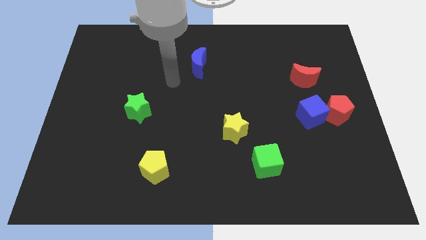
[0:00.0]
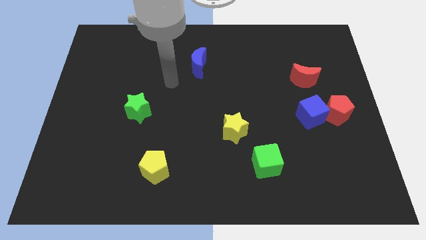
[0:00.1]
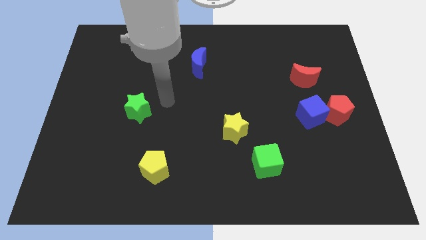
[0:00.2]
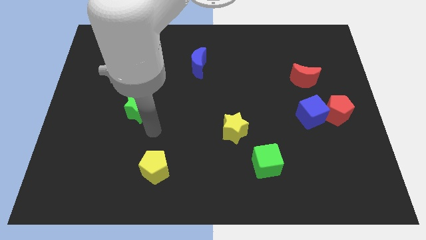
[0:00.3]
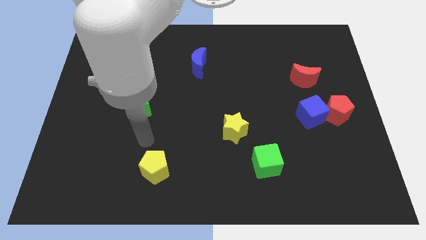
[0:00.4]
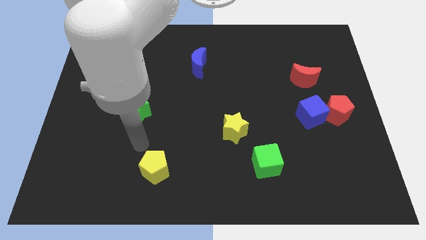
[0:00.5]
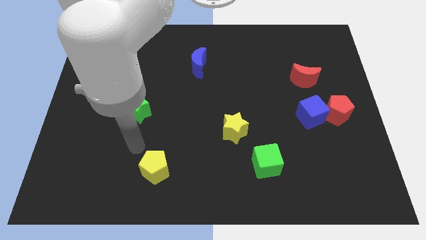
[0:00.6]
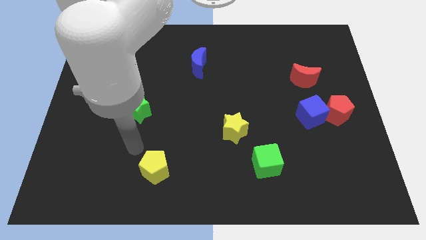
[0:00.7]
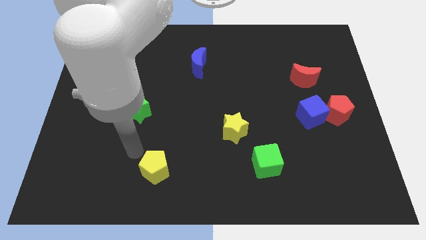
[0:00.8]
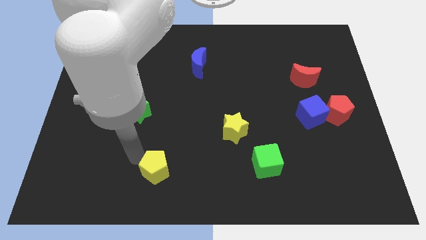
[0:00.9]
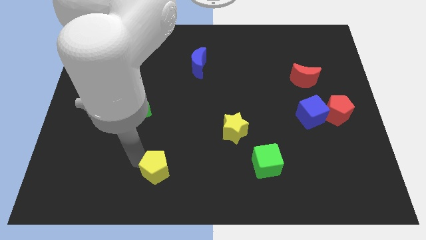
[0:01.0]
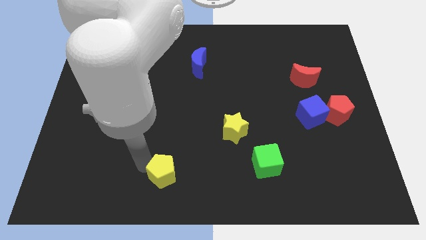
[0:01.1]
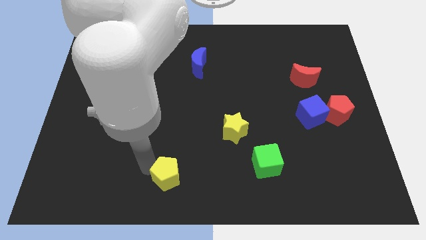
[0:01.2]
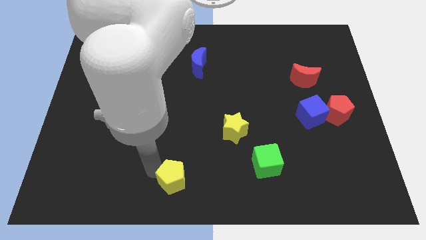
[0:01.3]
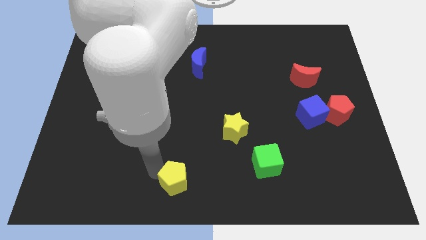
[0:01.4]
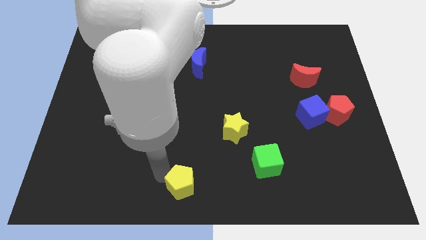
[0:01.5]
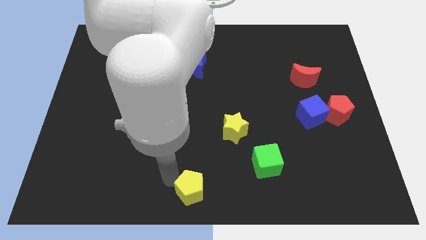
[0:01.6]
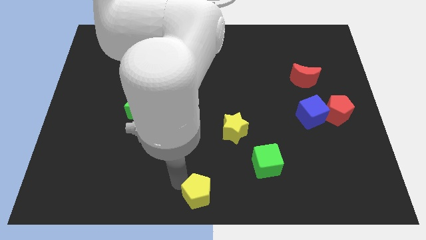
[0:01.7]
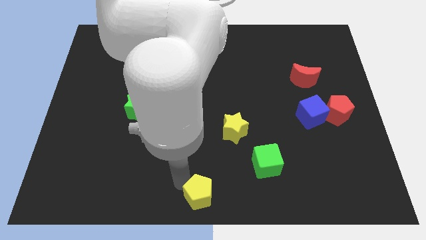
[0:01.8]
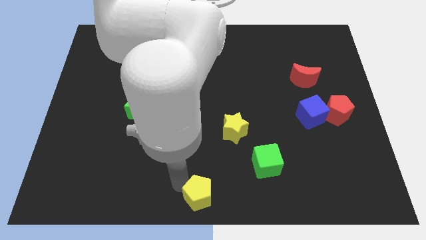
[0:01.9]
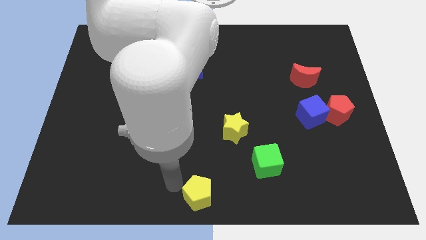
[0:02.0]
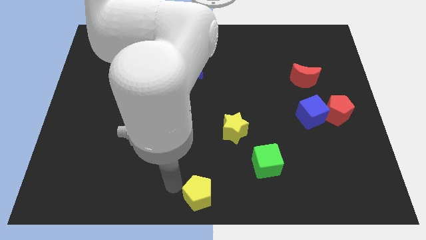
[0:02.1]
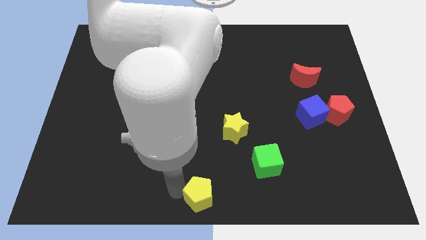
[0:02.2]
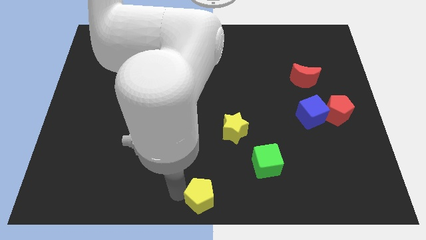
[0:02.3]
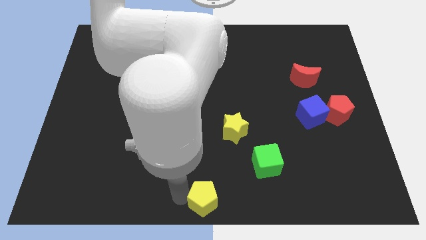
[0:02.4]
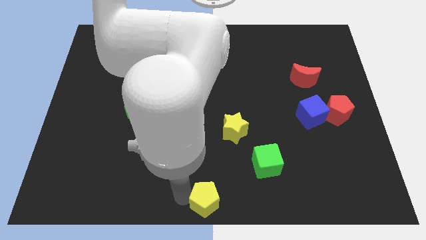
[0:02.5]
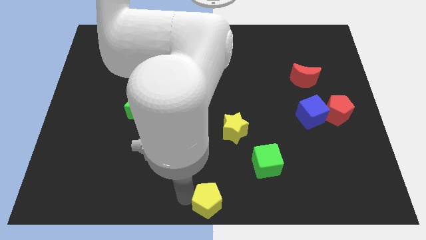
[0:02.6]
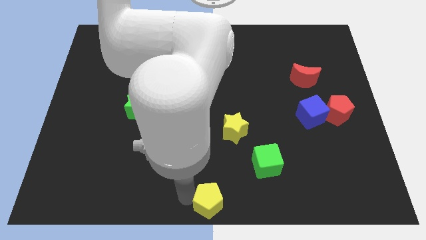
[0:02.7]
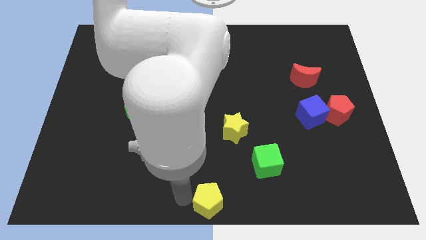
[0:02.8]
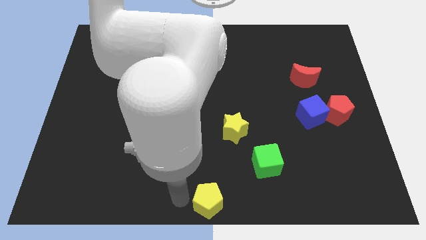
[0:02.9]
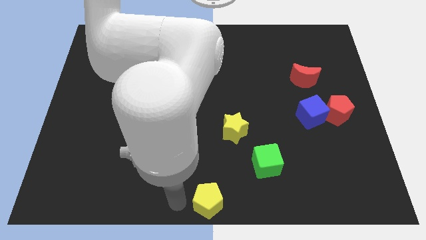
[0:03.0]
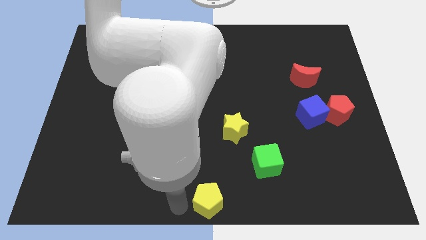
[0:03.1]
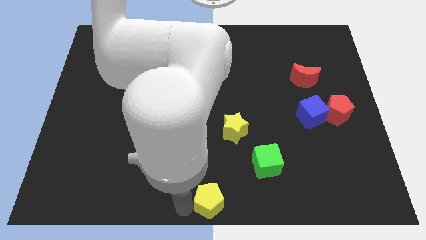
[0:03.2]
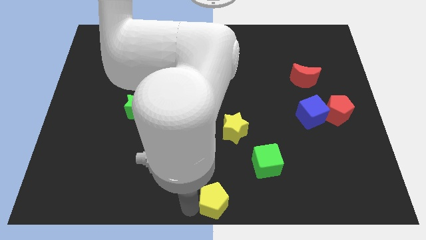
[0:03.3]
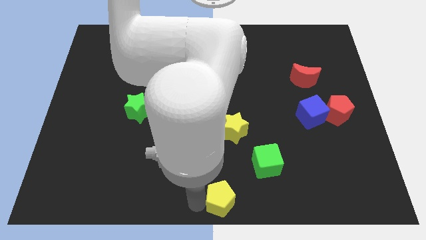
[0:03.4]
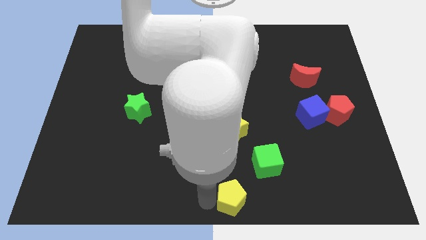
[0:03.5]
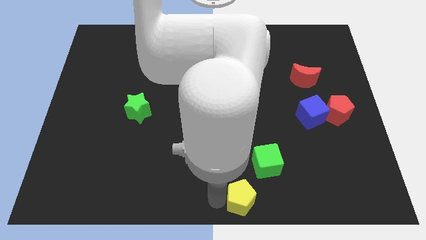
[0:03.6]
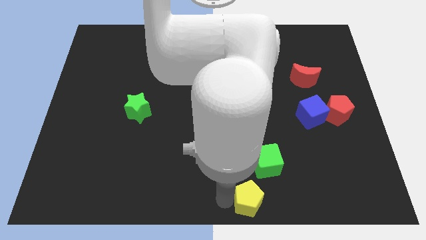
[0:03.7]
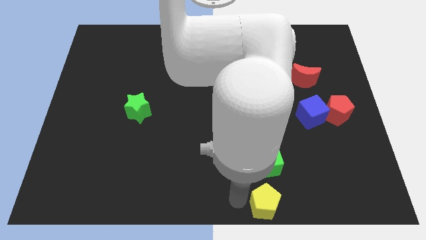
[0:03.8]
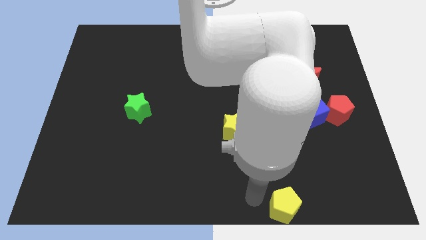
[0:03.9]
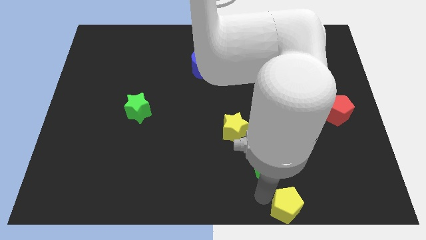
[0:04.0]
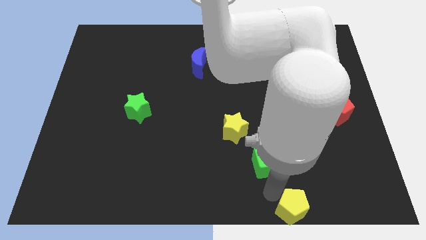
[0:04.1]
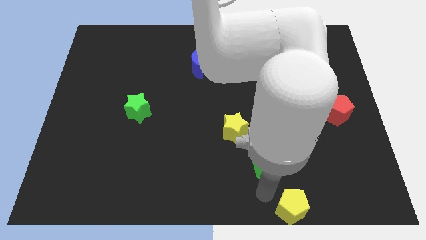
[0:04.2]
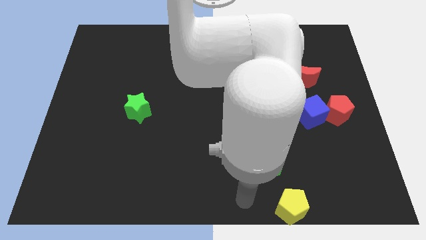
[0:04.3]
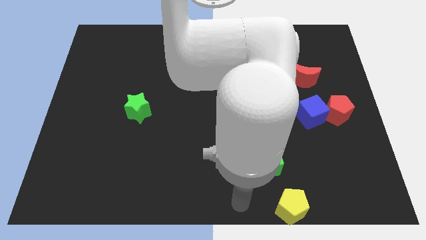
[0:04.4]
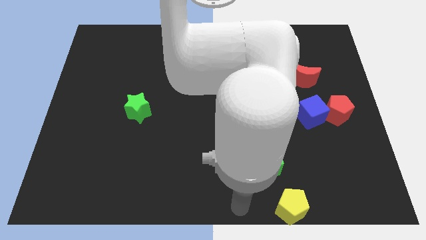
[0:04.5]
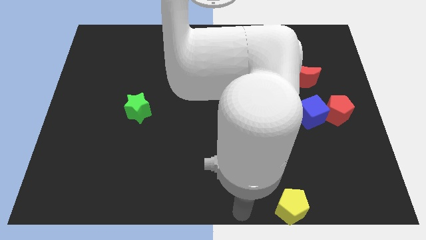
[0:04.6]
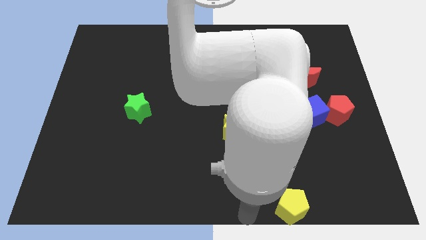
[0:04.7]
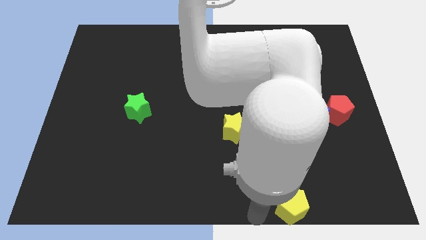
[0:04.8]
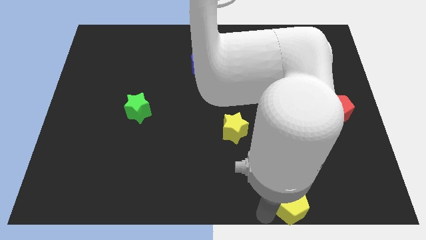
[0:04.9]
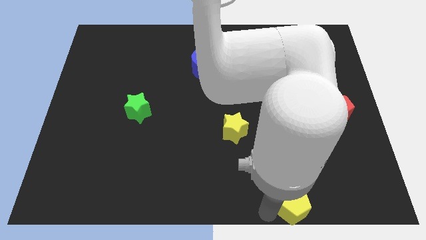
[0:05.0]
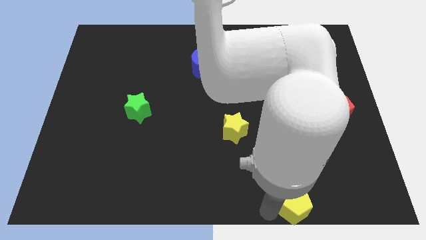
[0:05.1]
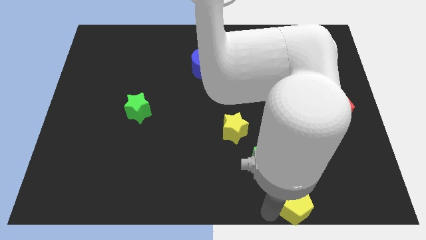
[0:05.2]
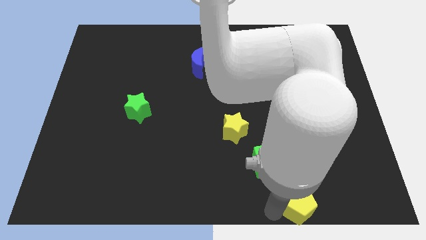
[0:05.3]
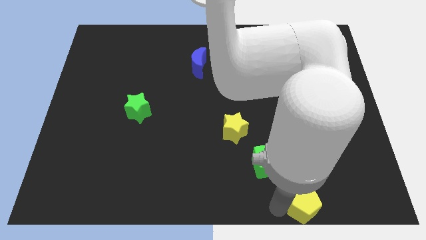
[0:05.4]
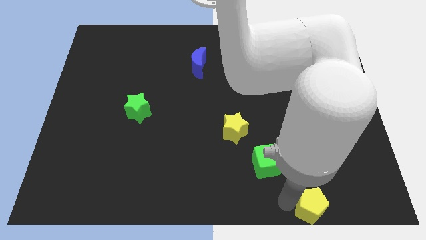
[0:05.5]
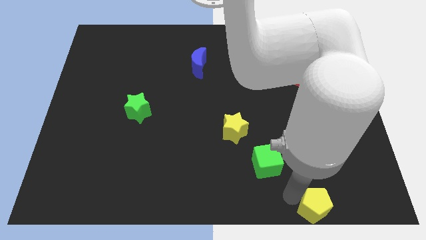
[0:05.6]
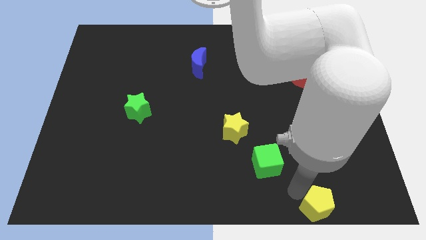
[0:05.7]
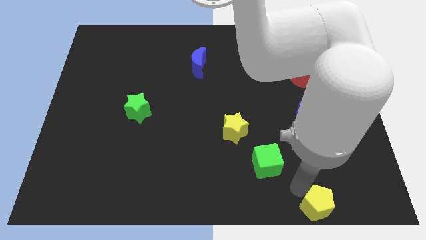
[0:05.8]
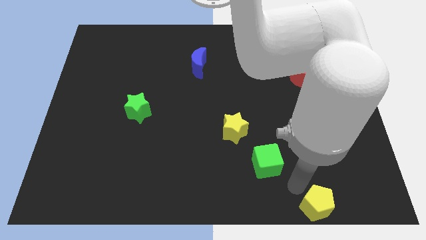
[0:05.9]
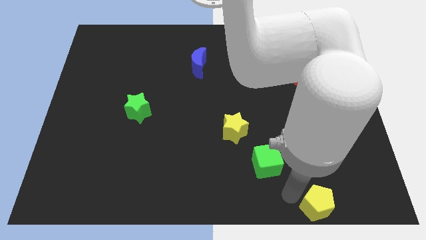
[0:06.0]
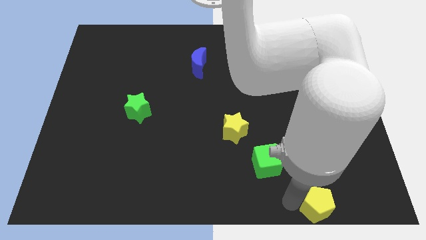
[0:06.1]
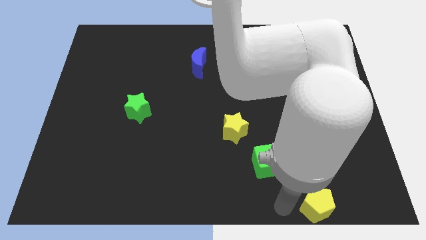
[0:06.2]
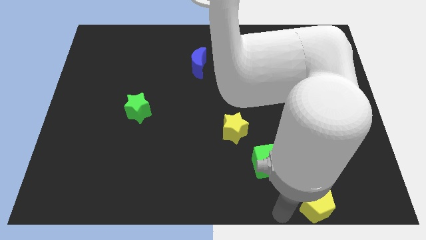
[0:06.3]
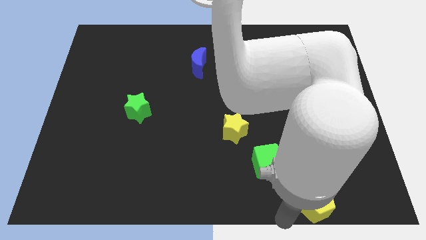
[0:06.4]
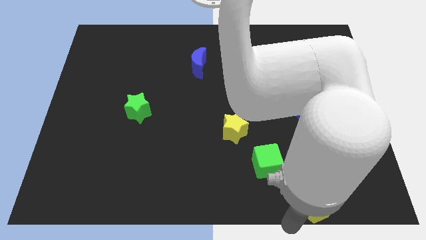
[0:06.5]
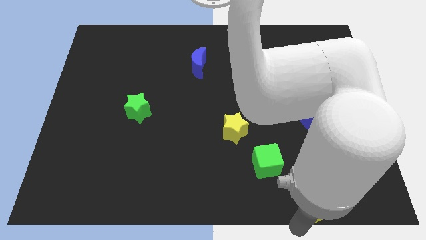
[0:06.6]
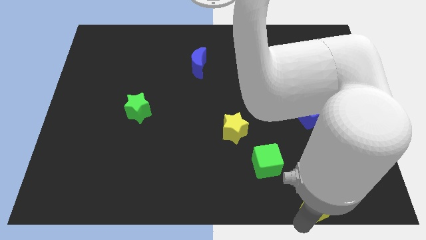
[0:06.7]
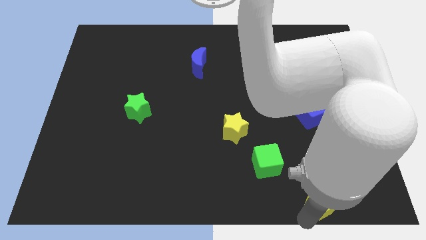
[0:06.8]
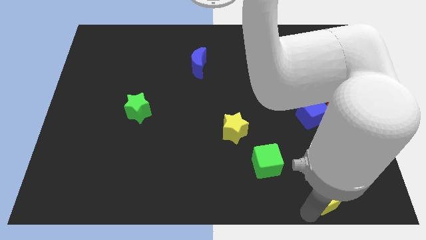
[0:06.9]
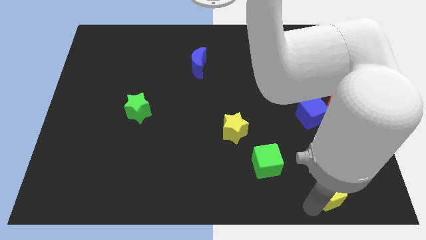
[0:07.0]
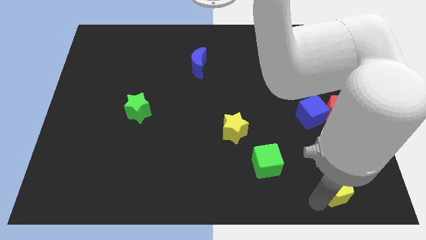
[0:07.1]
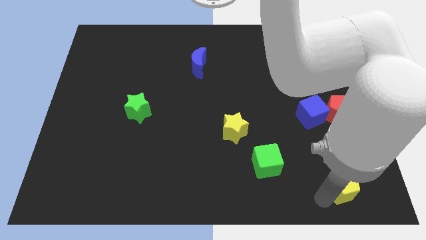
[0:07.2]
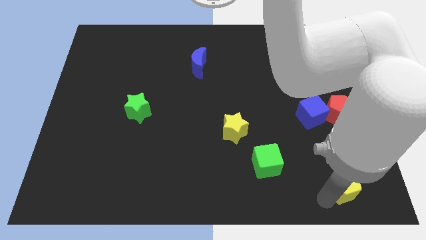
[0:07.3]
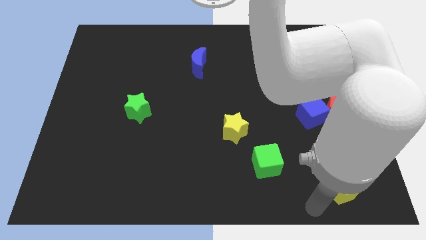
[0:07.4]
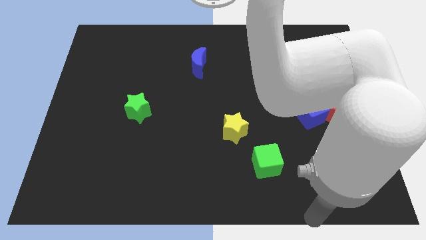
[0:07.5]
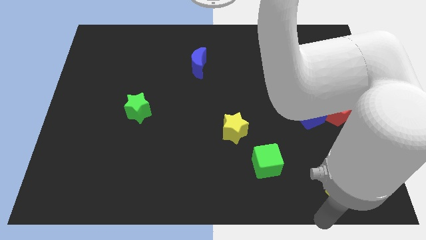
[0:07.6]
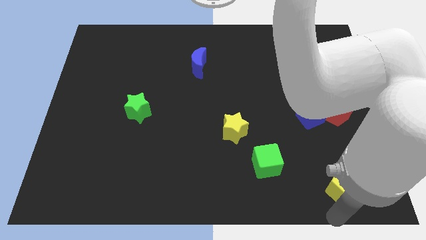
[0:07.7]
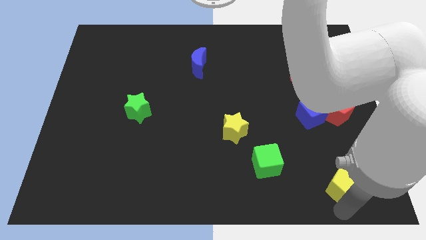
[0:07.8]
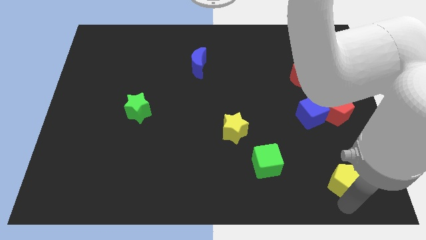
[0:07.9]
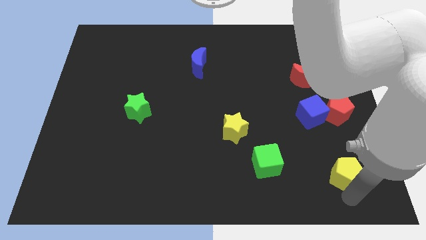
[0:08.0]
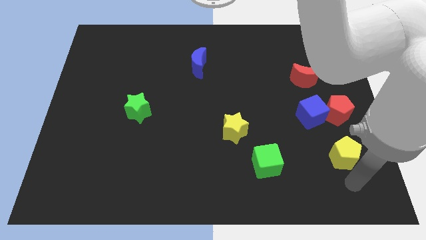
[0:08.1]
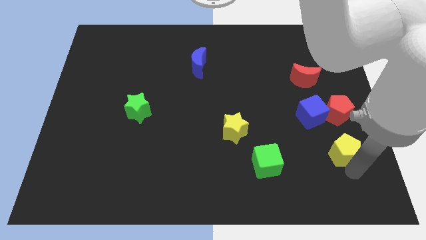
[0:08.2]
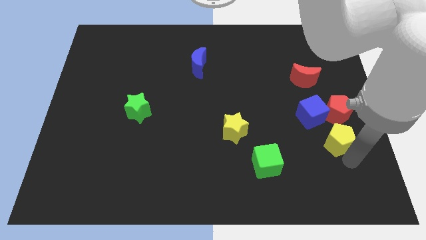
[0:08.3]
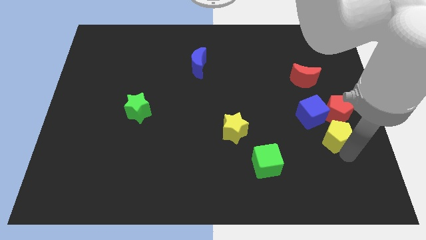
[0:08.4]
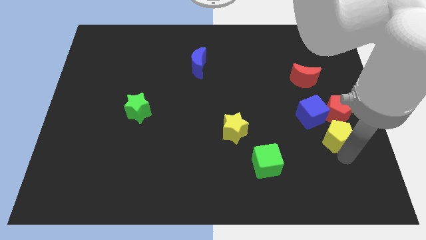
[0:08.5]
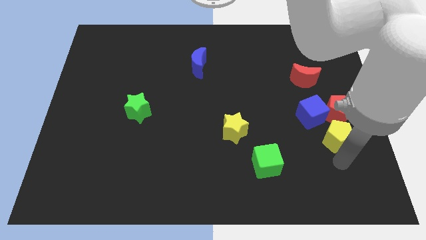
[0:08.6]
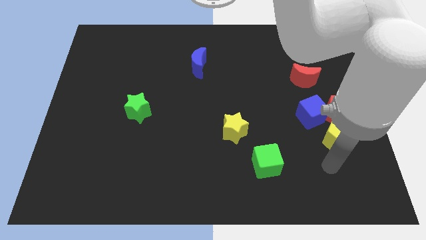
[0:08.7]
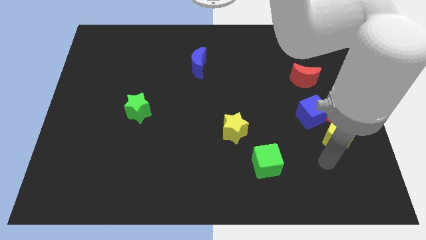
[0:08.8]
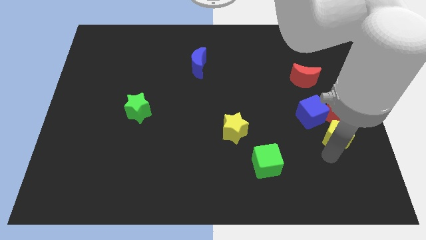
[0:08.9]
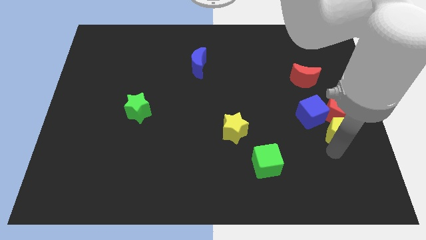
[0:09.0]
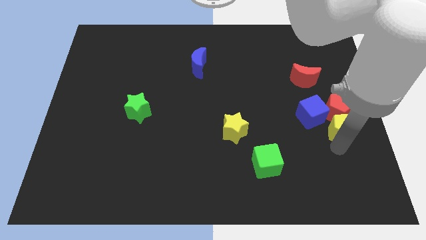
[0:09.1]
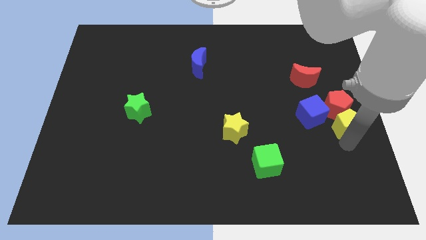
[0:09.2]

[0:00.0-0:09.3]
slide the yellow pentagon towards the red pentagon
